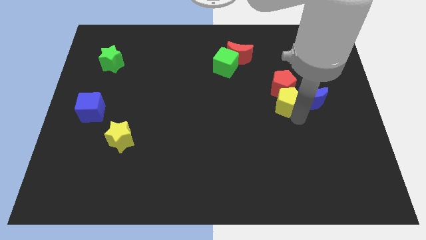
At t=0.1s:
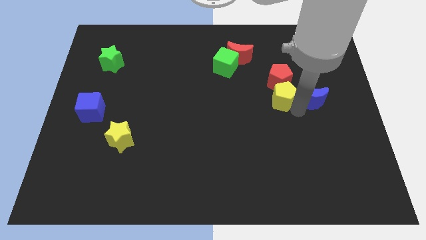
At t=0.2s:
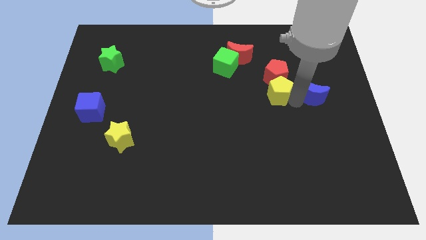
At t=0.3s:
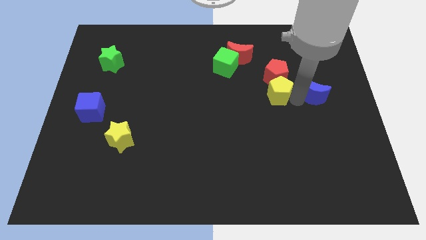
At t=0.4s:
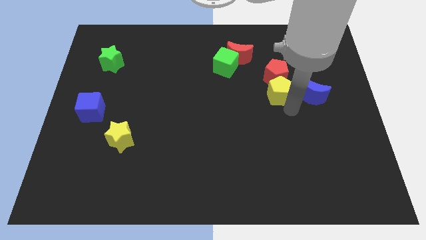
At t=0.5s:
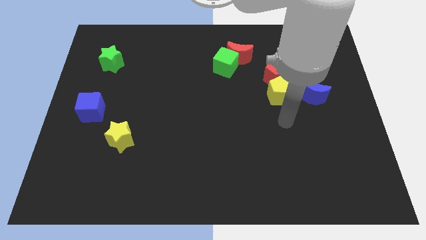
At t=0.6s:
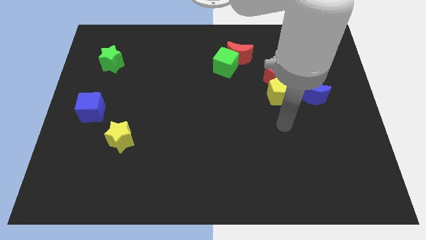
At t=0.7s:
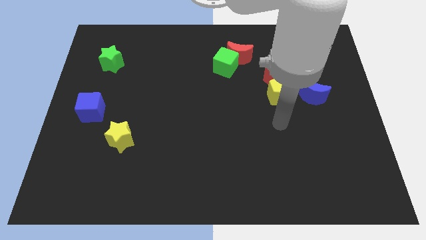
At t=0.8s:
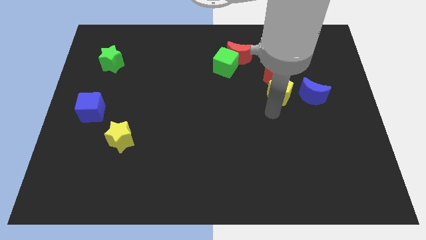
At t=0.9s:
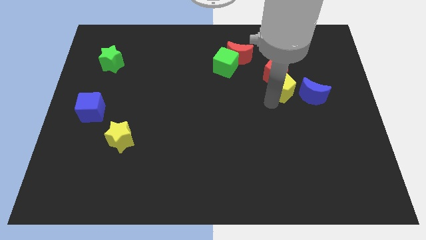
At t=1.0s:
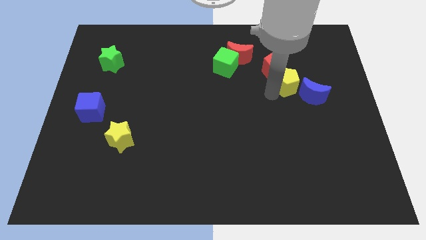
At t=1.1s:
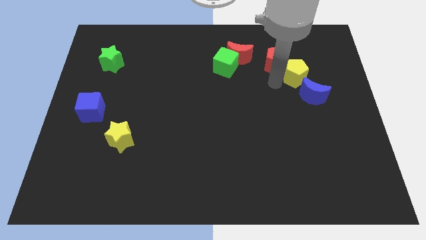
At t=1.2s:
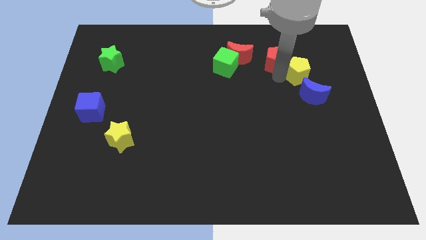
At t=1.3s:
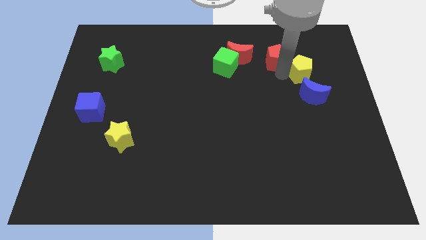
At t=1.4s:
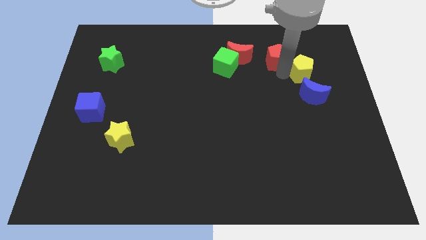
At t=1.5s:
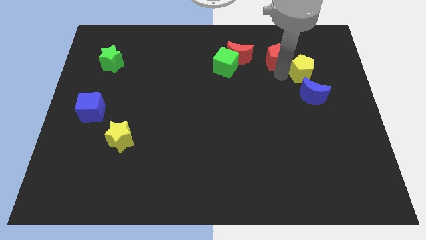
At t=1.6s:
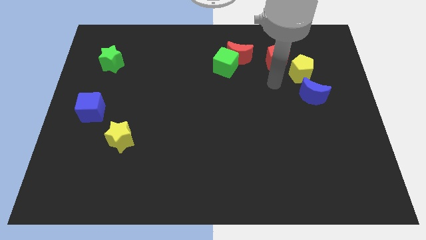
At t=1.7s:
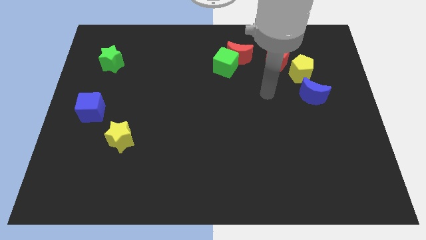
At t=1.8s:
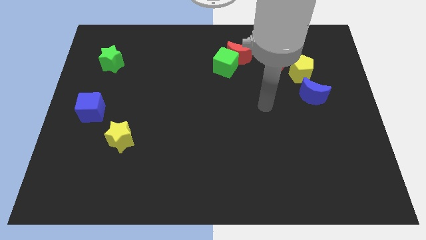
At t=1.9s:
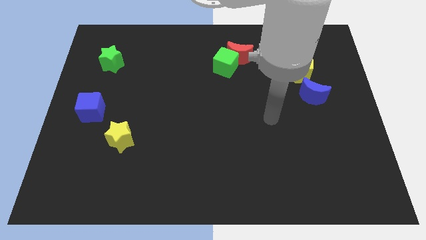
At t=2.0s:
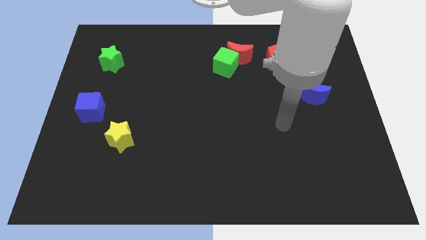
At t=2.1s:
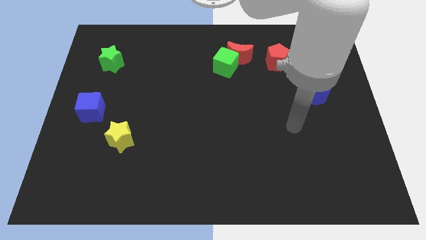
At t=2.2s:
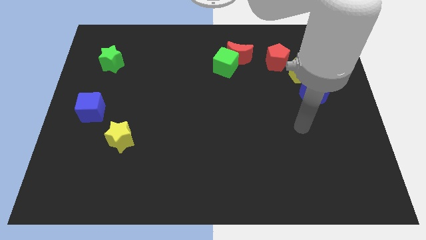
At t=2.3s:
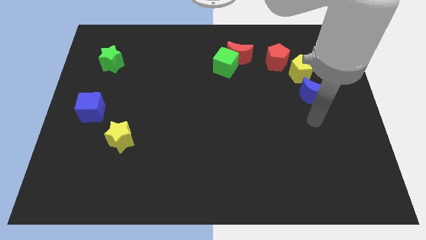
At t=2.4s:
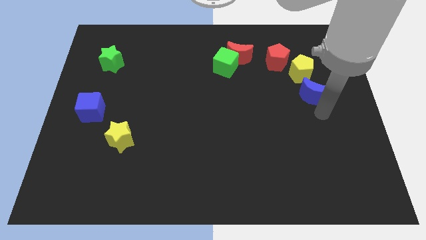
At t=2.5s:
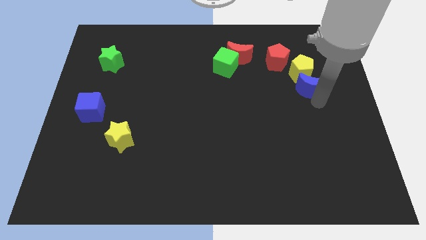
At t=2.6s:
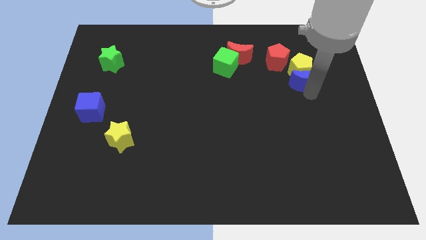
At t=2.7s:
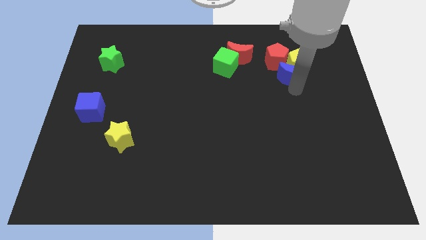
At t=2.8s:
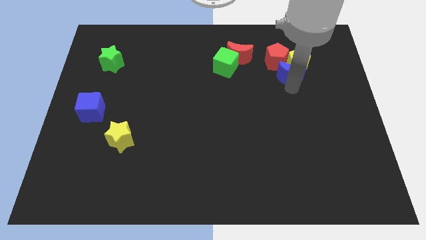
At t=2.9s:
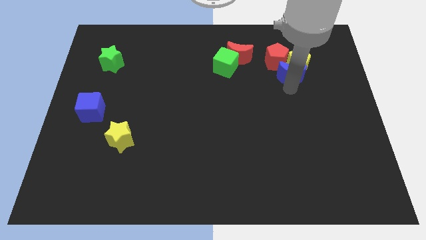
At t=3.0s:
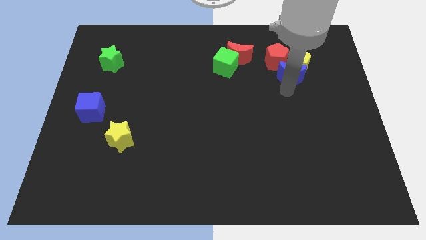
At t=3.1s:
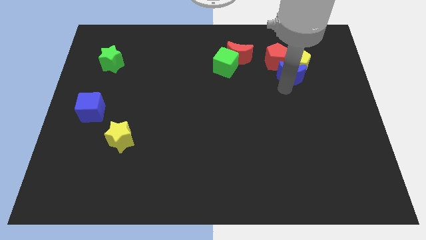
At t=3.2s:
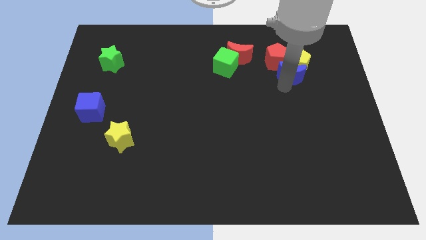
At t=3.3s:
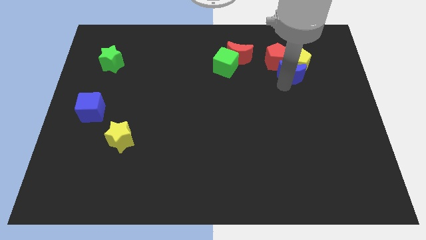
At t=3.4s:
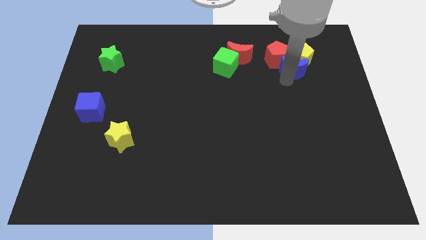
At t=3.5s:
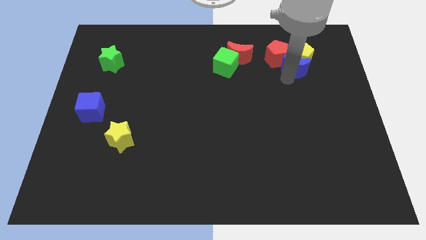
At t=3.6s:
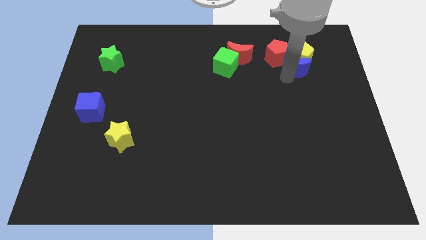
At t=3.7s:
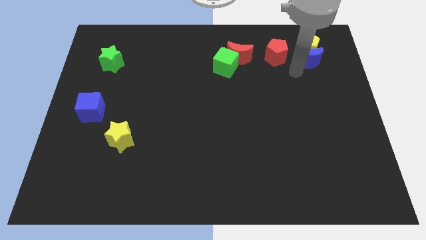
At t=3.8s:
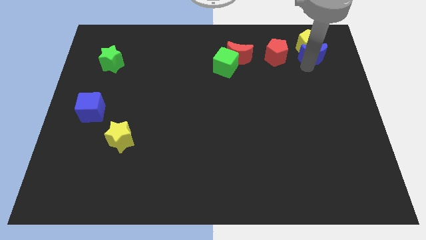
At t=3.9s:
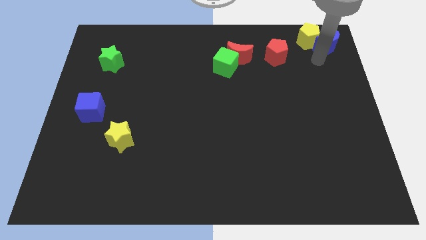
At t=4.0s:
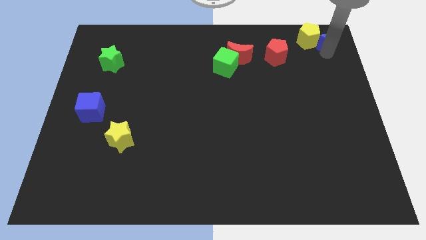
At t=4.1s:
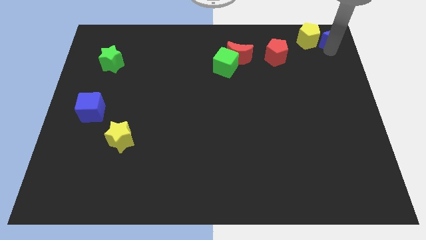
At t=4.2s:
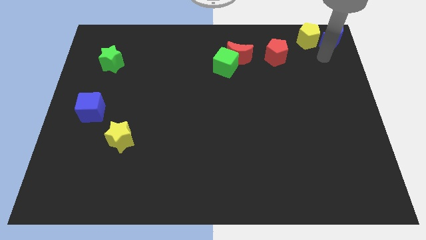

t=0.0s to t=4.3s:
push the red pentagon yellow pentagon and blue crescent towards the top right

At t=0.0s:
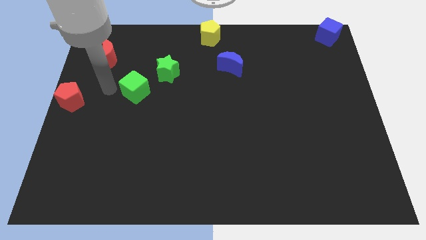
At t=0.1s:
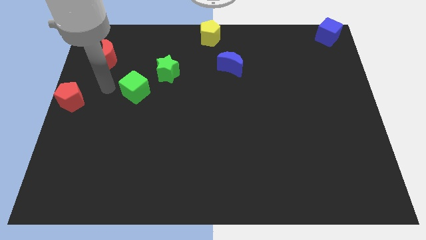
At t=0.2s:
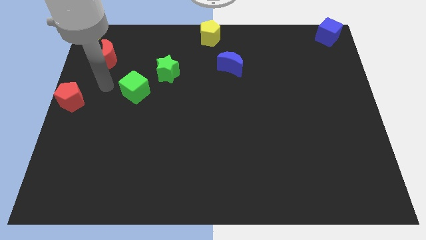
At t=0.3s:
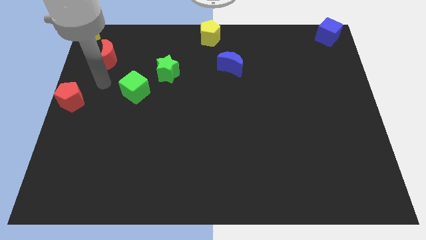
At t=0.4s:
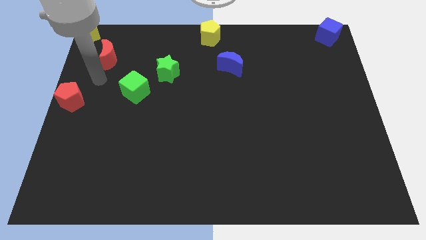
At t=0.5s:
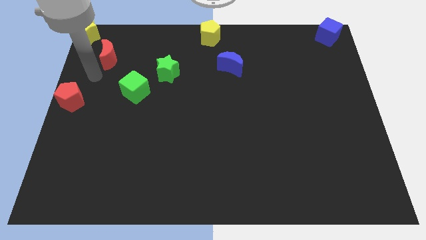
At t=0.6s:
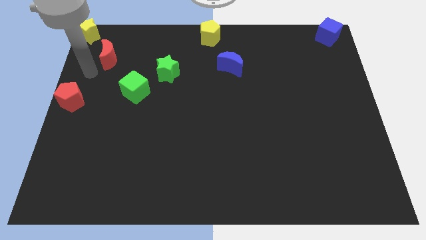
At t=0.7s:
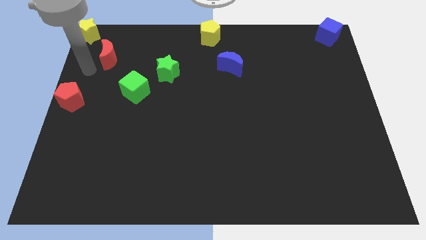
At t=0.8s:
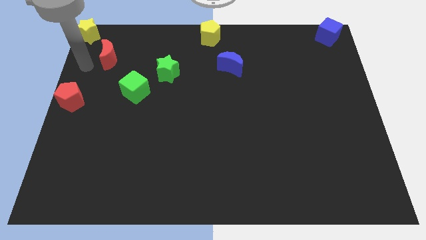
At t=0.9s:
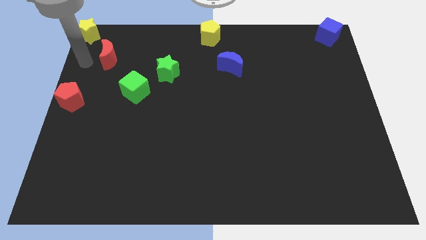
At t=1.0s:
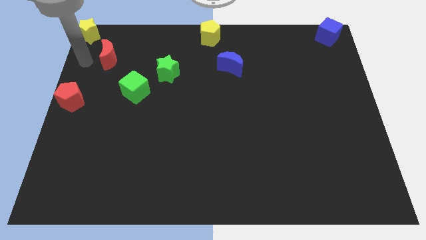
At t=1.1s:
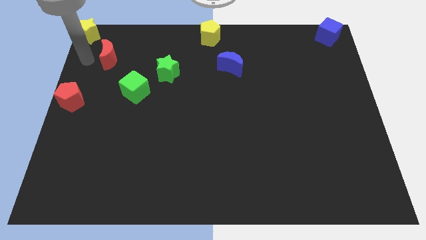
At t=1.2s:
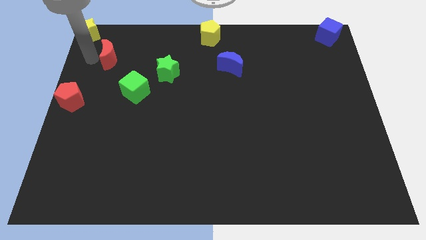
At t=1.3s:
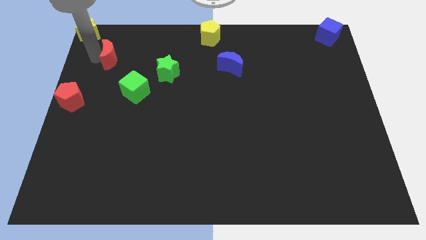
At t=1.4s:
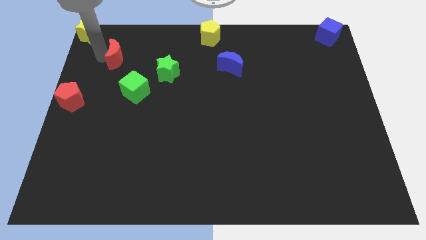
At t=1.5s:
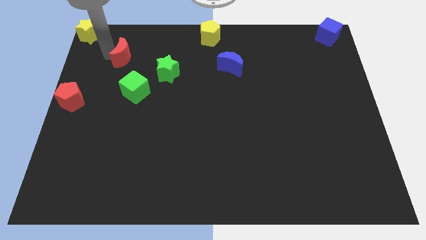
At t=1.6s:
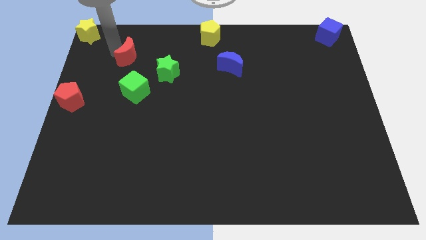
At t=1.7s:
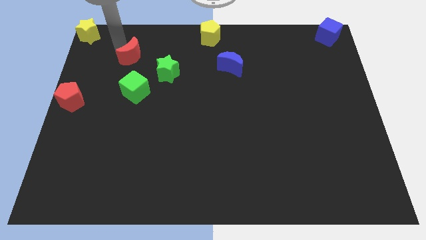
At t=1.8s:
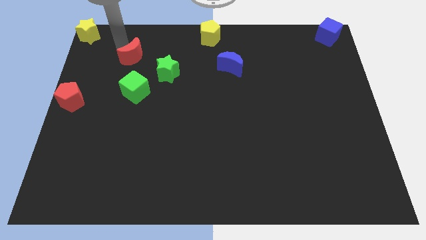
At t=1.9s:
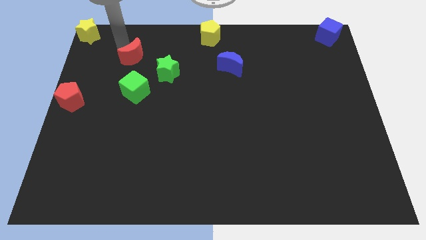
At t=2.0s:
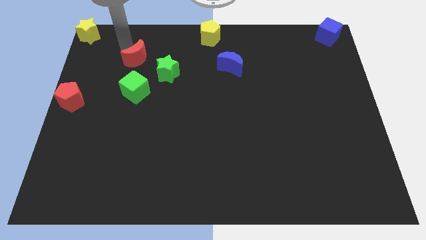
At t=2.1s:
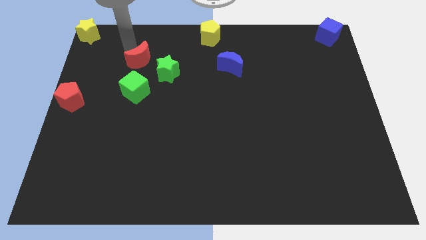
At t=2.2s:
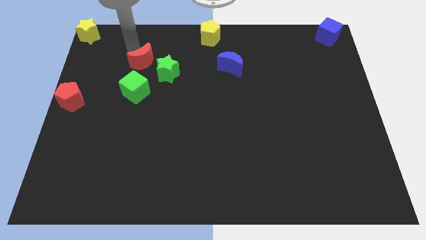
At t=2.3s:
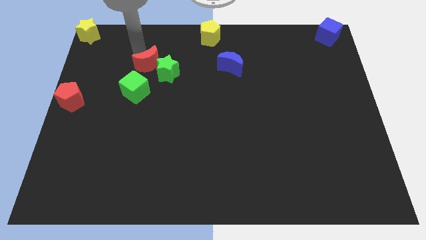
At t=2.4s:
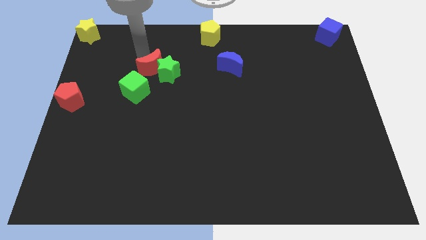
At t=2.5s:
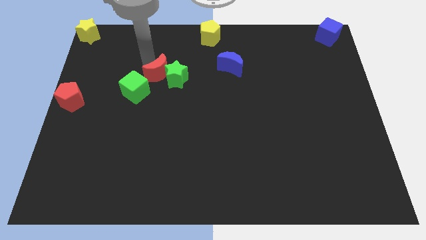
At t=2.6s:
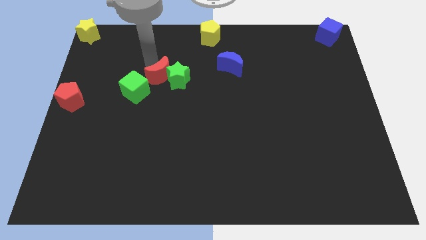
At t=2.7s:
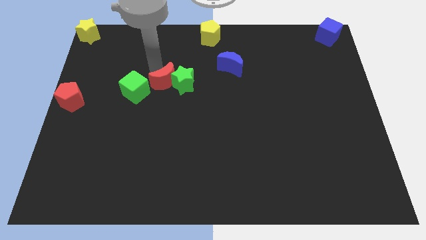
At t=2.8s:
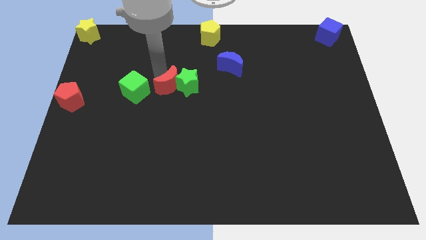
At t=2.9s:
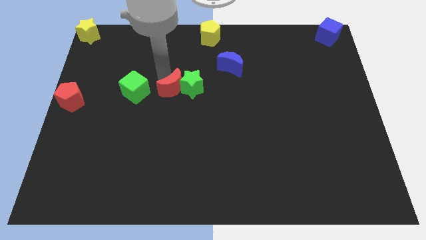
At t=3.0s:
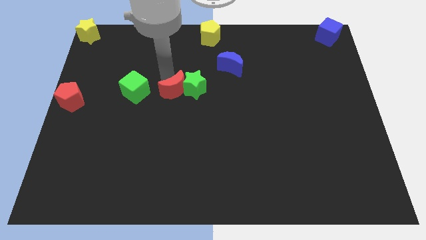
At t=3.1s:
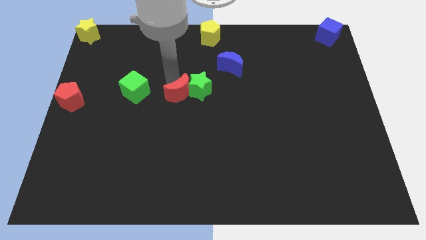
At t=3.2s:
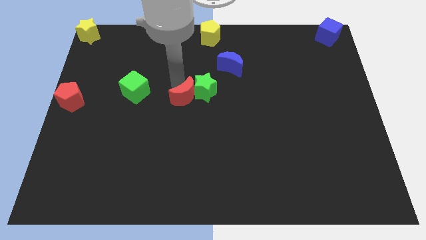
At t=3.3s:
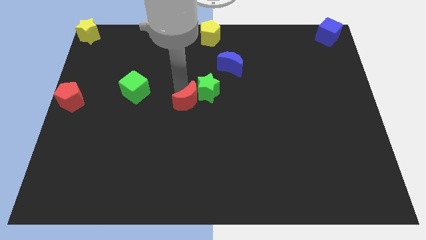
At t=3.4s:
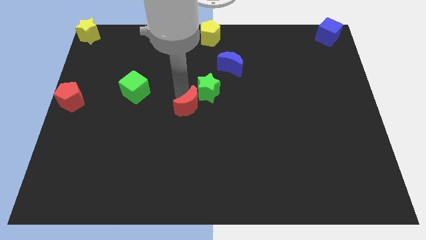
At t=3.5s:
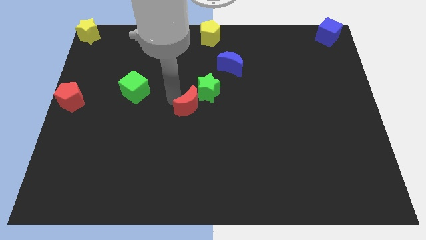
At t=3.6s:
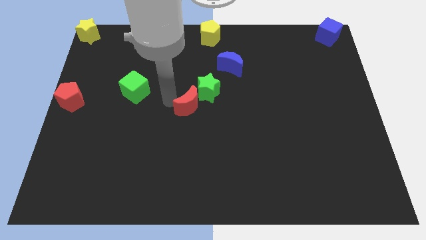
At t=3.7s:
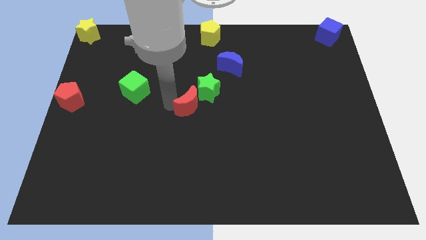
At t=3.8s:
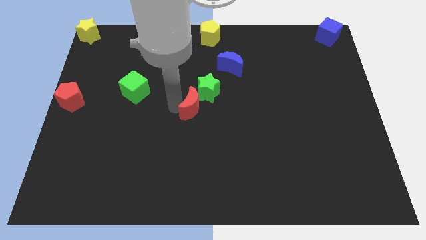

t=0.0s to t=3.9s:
put the red crescent at the bottom left side of the green star

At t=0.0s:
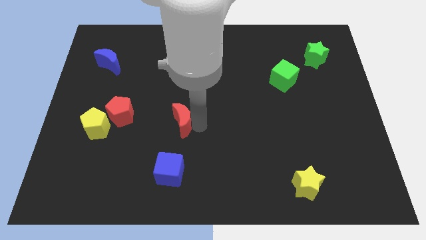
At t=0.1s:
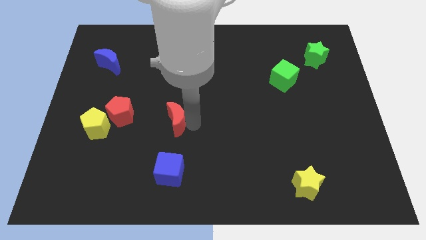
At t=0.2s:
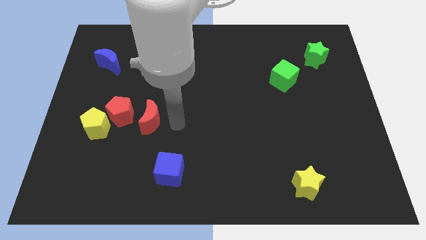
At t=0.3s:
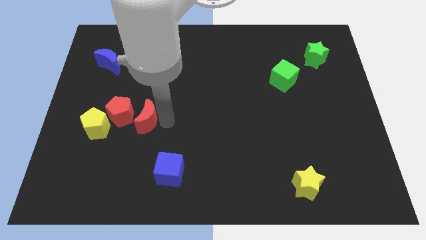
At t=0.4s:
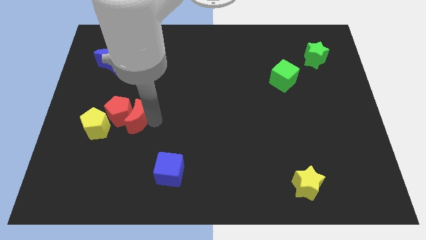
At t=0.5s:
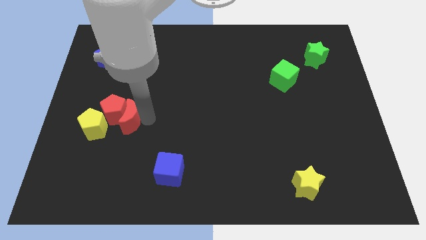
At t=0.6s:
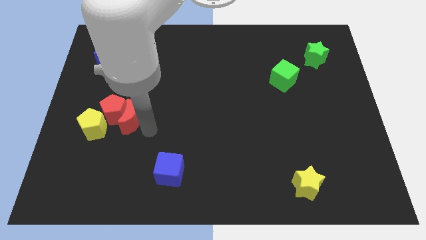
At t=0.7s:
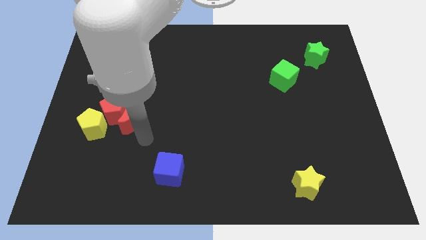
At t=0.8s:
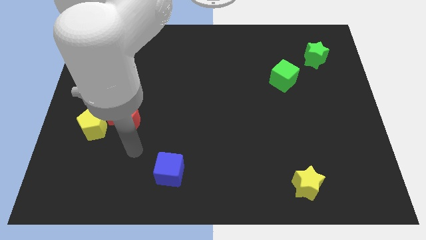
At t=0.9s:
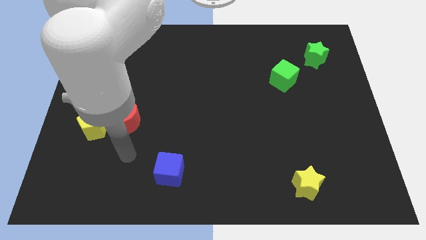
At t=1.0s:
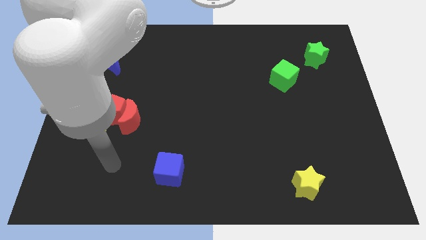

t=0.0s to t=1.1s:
slide red moon into red pentagon
